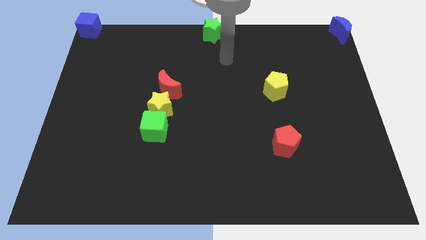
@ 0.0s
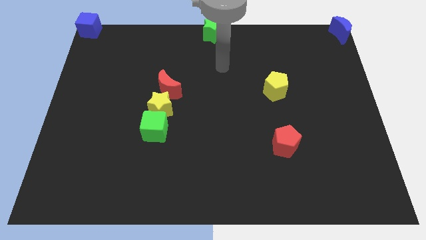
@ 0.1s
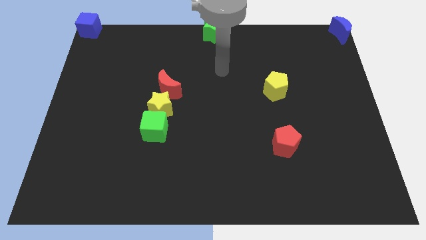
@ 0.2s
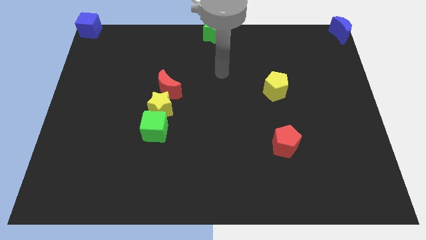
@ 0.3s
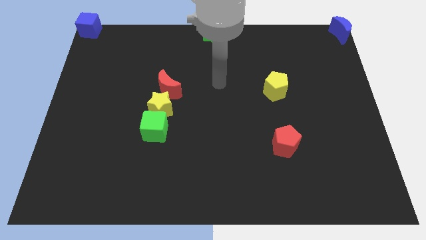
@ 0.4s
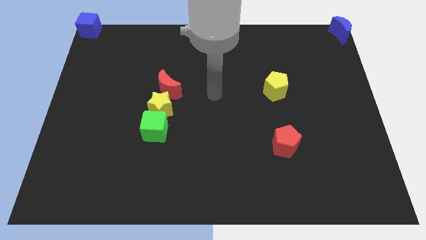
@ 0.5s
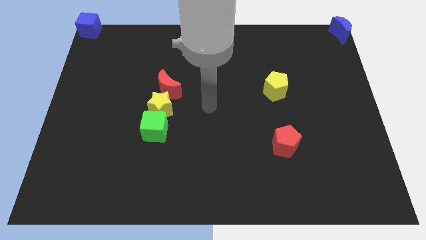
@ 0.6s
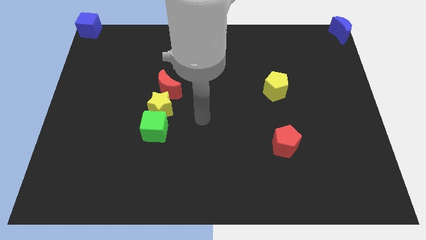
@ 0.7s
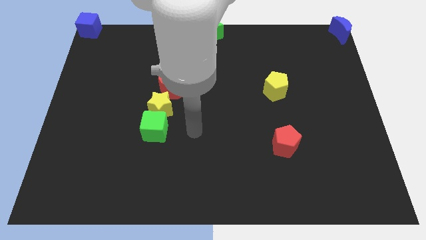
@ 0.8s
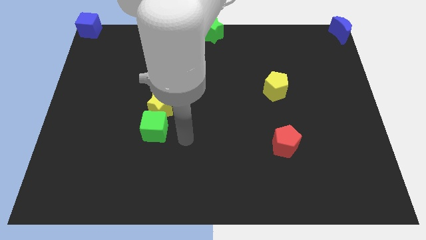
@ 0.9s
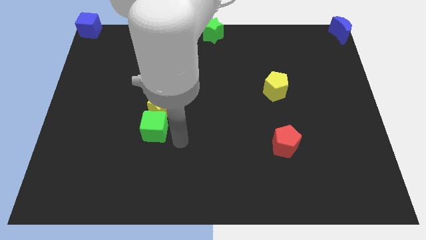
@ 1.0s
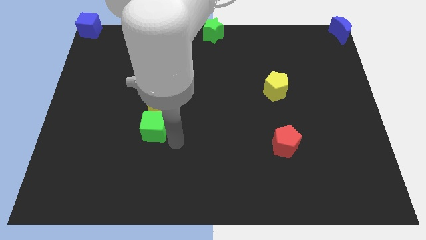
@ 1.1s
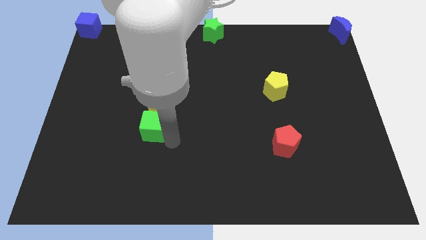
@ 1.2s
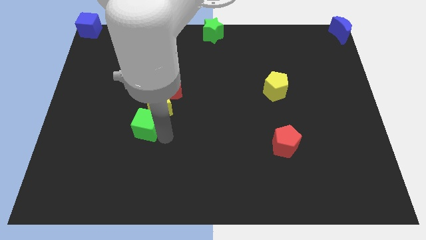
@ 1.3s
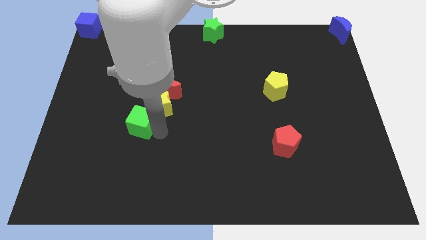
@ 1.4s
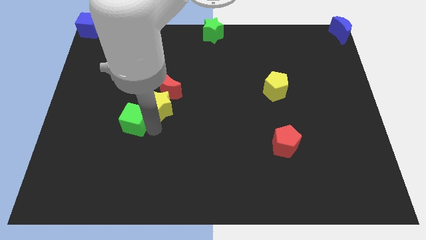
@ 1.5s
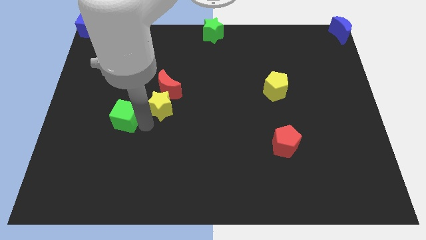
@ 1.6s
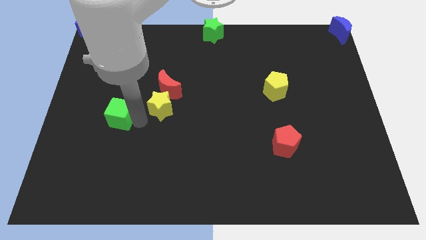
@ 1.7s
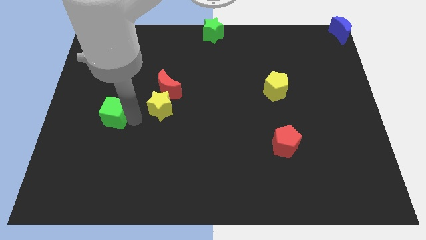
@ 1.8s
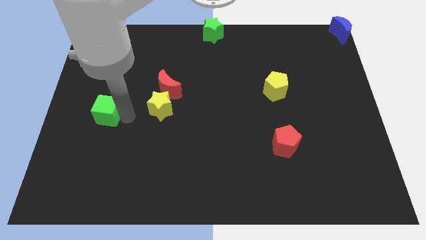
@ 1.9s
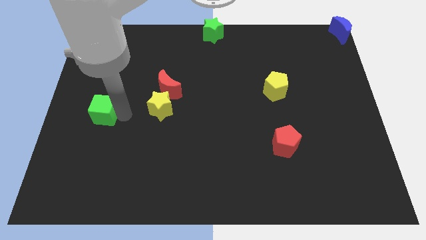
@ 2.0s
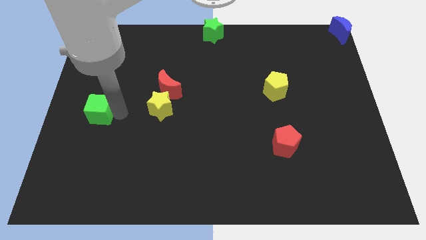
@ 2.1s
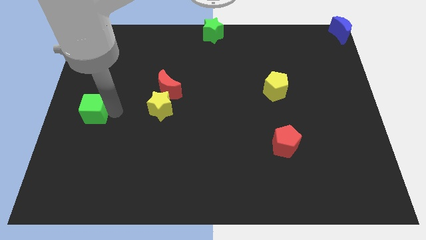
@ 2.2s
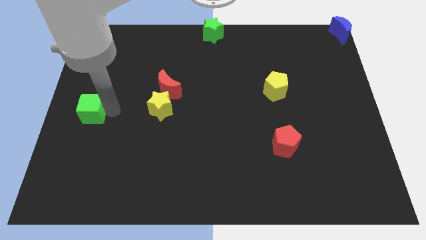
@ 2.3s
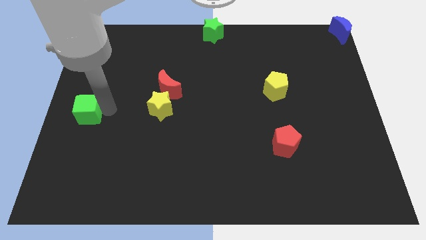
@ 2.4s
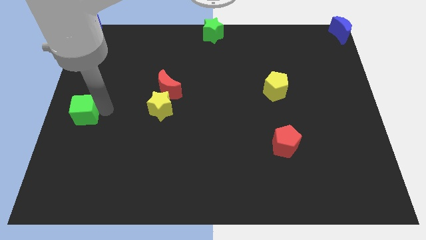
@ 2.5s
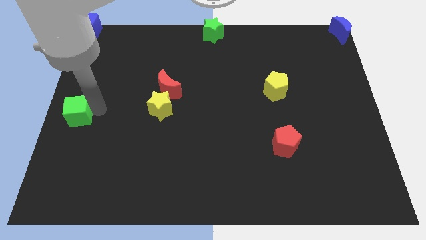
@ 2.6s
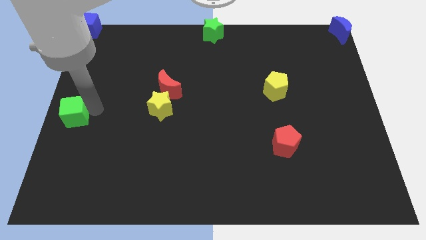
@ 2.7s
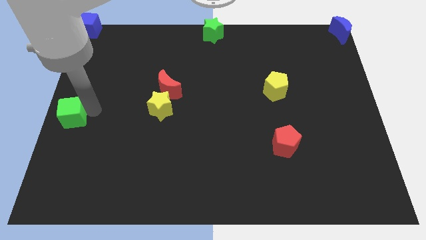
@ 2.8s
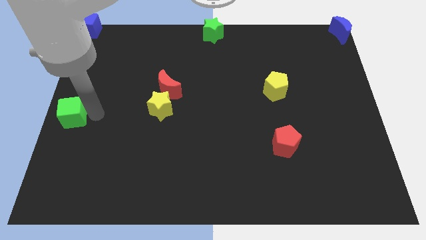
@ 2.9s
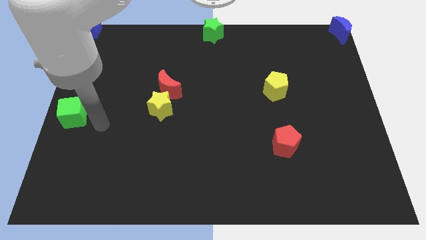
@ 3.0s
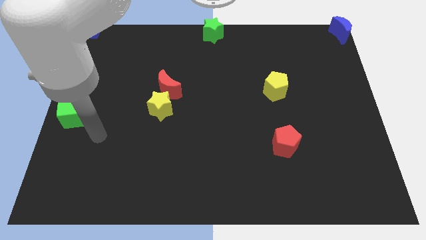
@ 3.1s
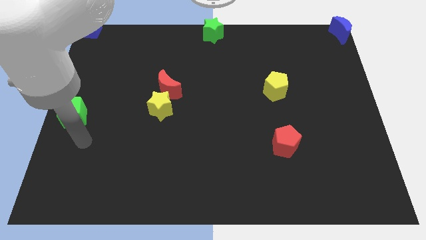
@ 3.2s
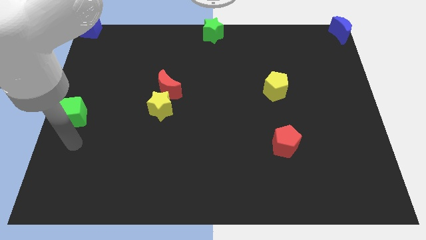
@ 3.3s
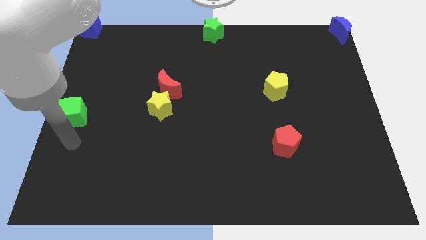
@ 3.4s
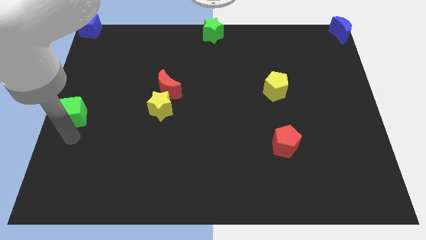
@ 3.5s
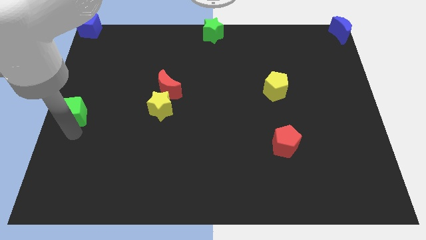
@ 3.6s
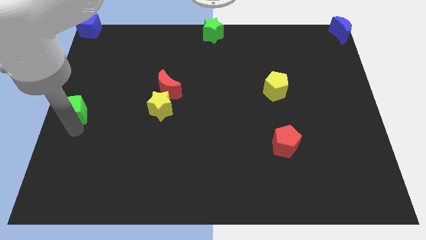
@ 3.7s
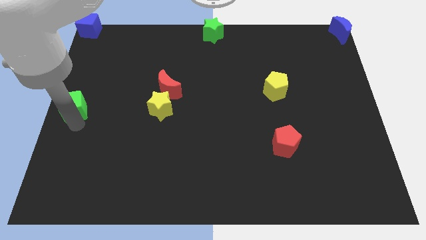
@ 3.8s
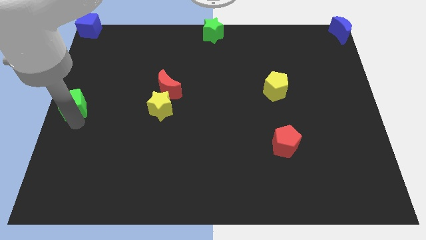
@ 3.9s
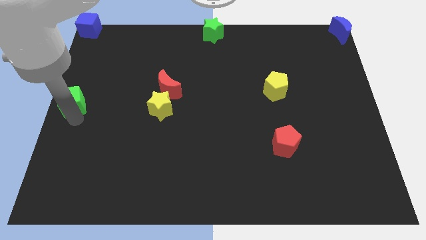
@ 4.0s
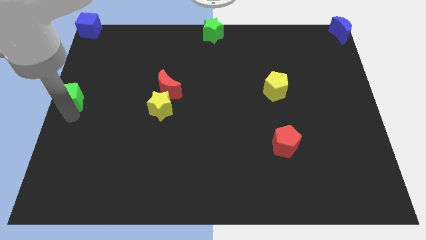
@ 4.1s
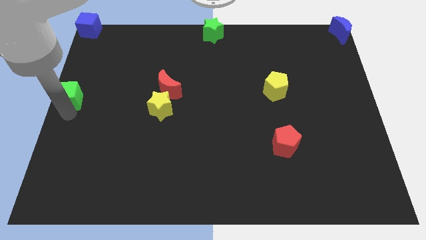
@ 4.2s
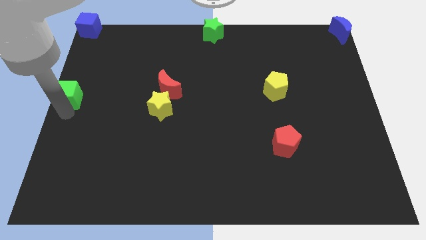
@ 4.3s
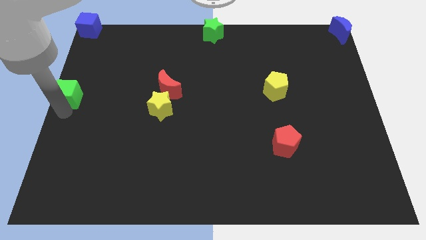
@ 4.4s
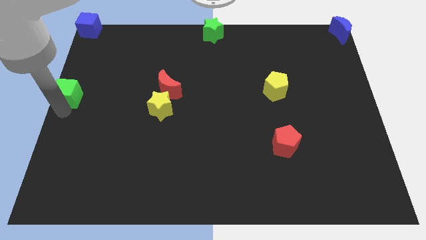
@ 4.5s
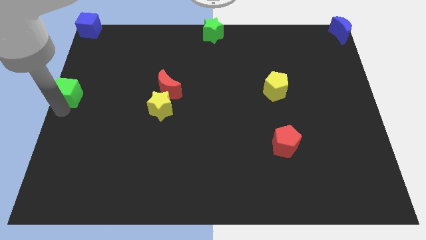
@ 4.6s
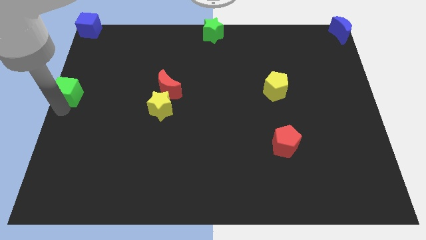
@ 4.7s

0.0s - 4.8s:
place the green cube at the center left of the board

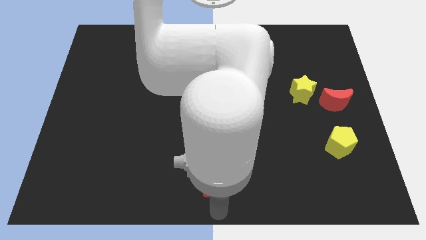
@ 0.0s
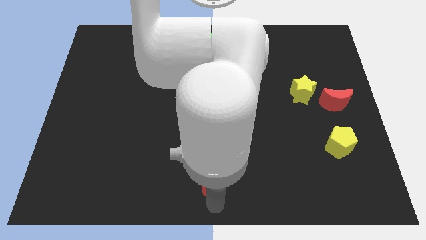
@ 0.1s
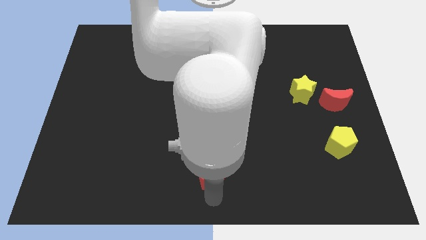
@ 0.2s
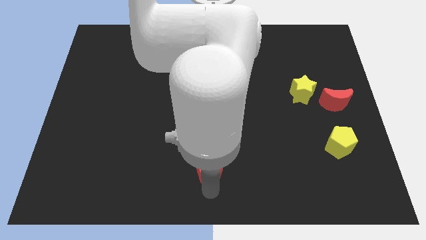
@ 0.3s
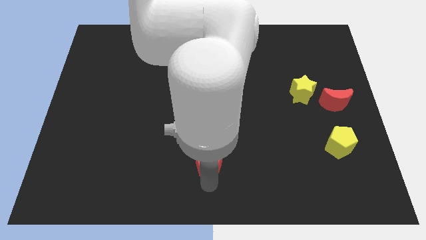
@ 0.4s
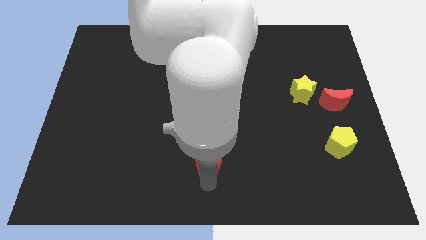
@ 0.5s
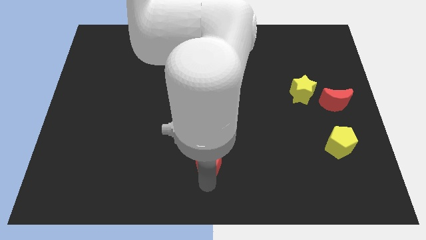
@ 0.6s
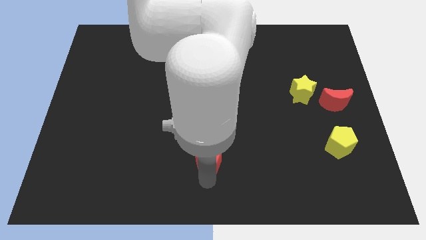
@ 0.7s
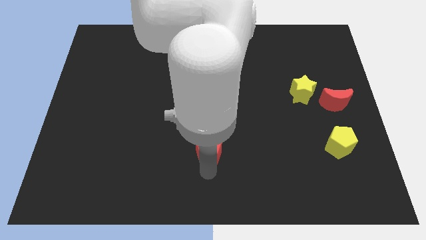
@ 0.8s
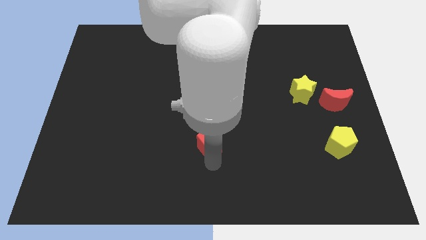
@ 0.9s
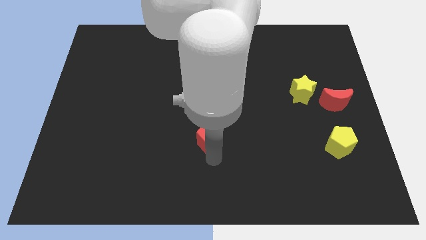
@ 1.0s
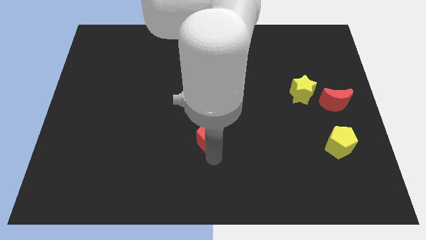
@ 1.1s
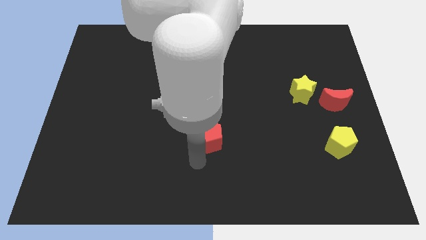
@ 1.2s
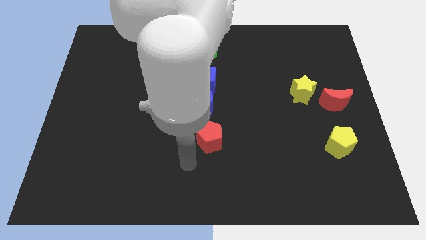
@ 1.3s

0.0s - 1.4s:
push the red pentagon towards the blue moon

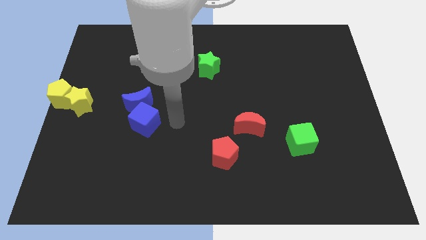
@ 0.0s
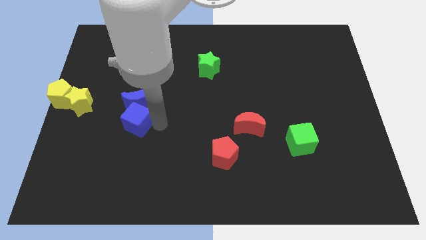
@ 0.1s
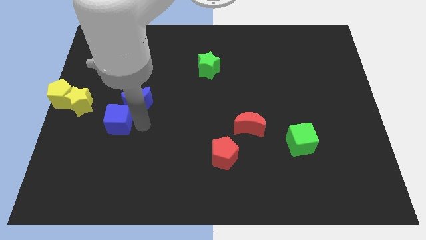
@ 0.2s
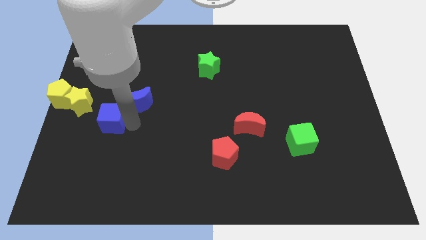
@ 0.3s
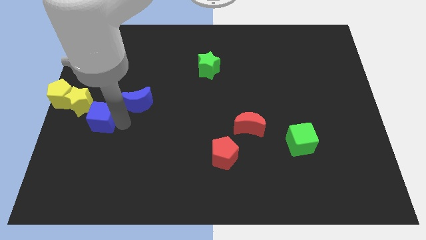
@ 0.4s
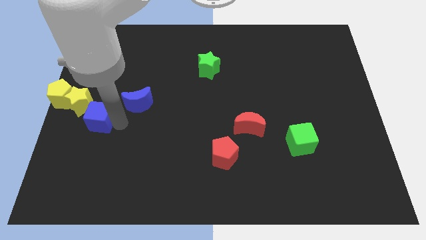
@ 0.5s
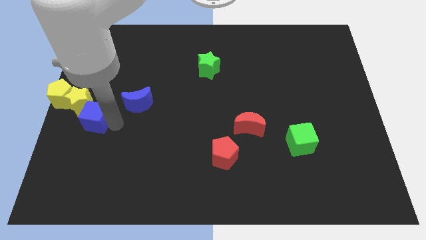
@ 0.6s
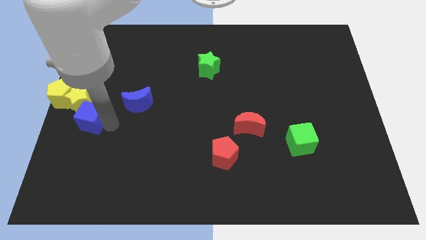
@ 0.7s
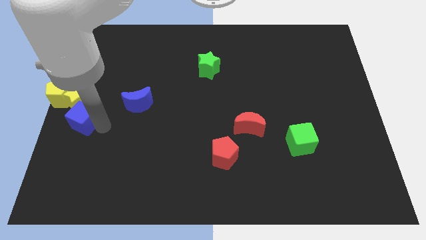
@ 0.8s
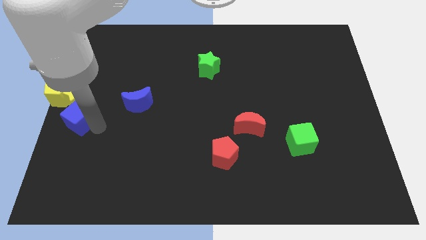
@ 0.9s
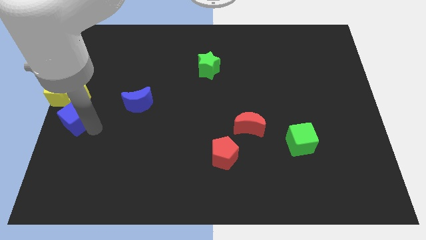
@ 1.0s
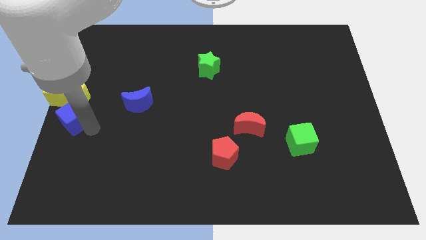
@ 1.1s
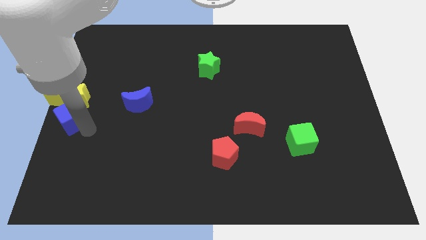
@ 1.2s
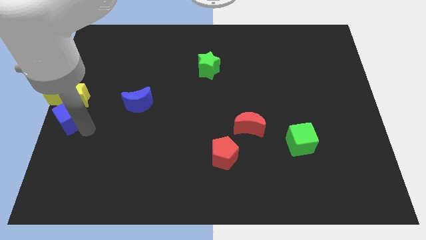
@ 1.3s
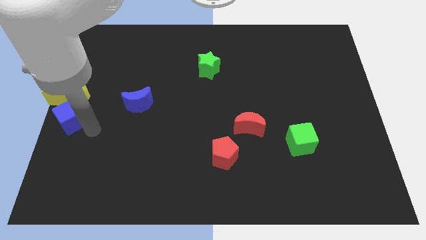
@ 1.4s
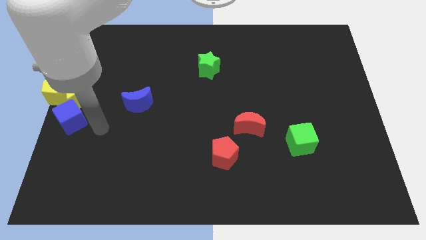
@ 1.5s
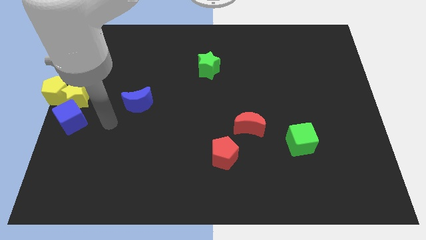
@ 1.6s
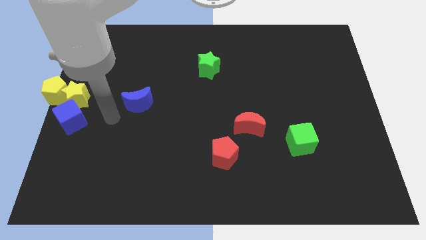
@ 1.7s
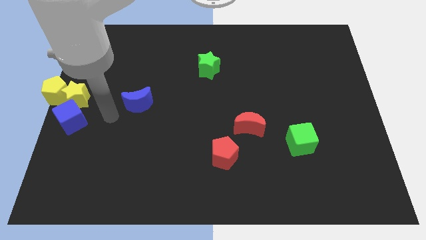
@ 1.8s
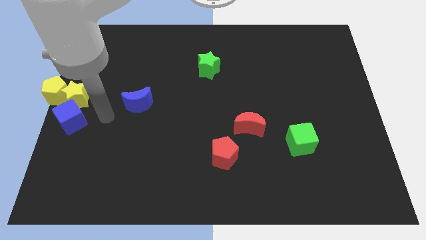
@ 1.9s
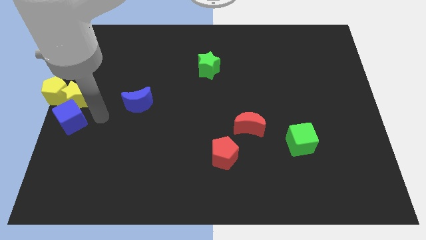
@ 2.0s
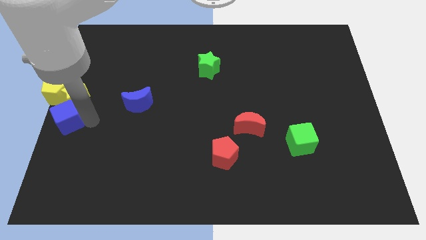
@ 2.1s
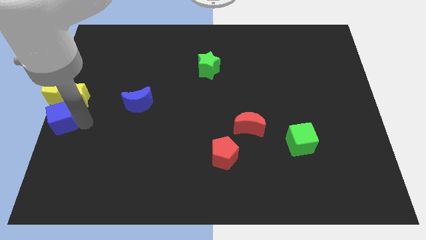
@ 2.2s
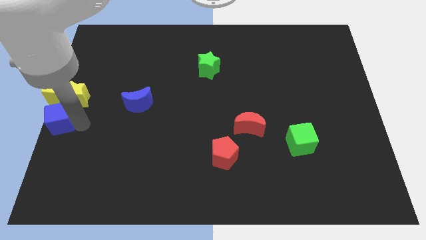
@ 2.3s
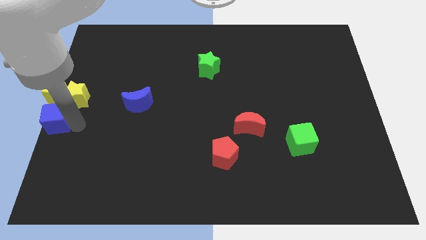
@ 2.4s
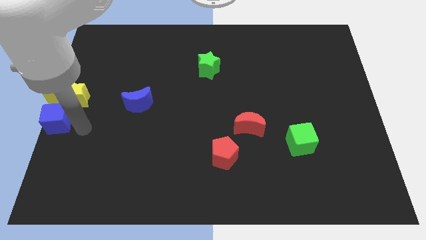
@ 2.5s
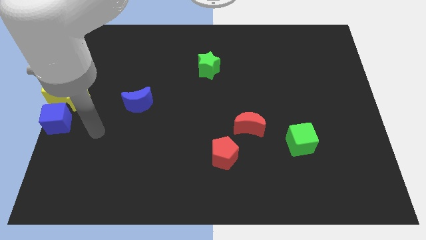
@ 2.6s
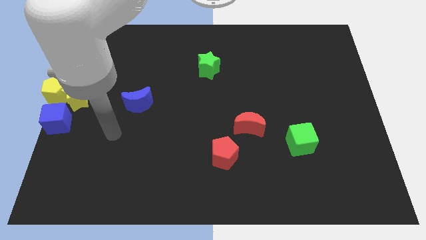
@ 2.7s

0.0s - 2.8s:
move the blue cube below to the yellow pentagon

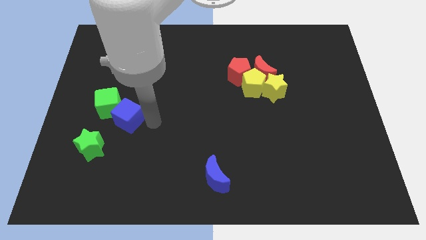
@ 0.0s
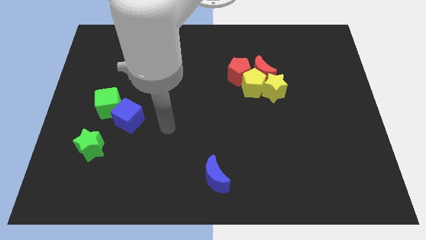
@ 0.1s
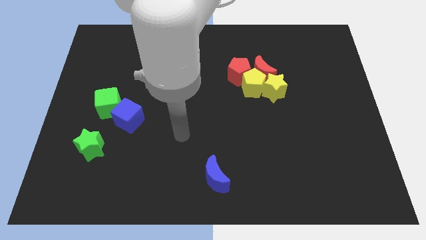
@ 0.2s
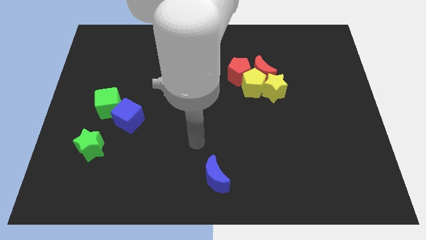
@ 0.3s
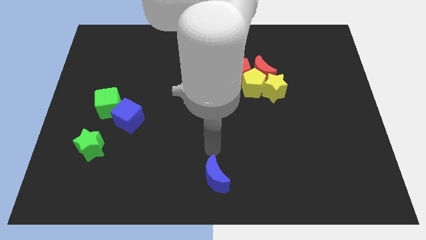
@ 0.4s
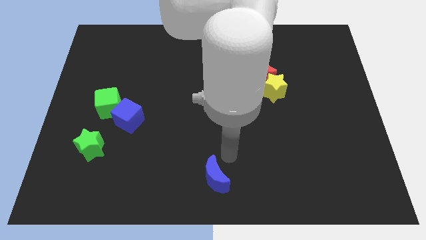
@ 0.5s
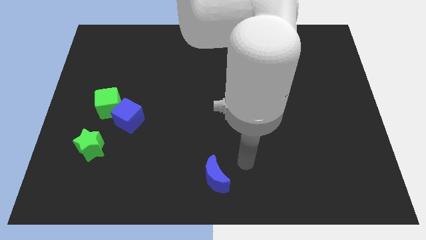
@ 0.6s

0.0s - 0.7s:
move the arm away from the blue cube
